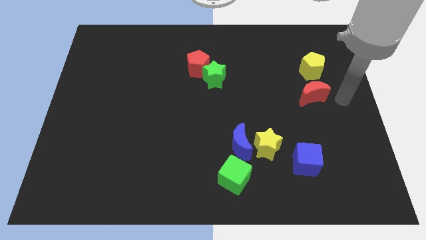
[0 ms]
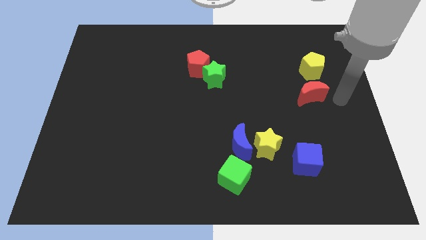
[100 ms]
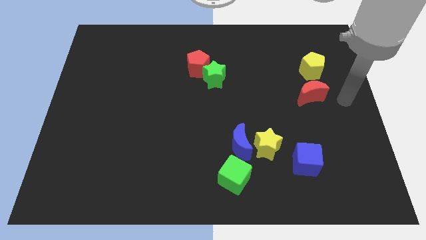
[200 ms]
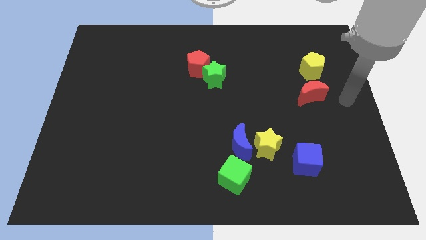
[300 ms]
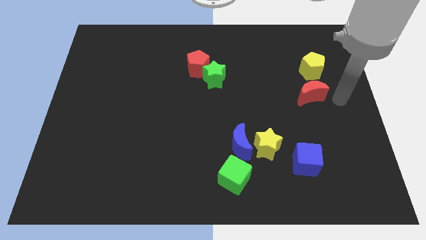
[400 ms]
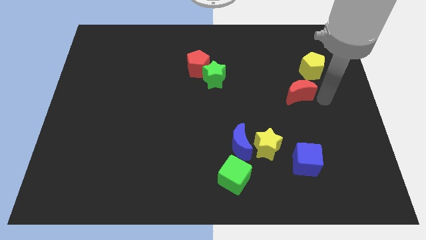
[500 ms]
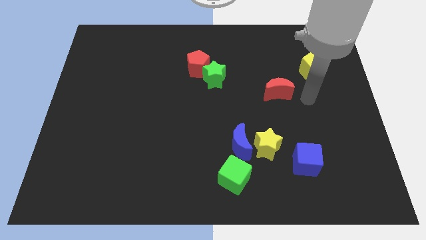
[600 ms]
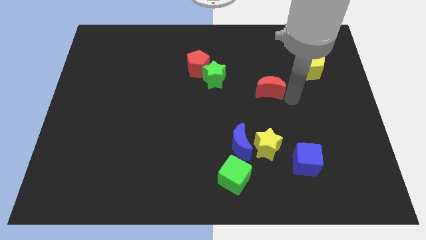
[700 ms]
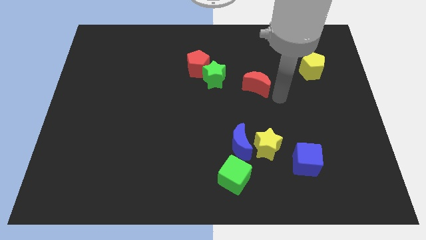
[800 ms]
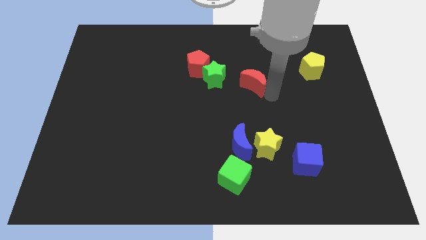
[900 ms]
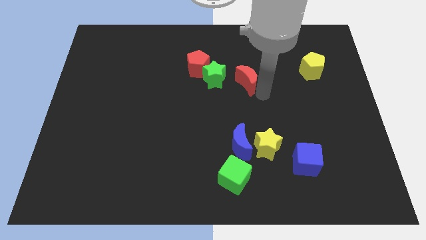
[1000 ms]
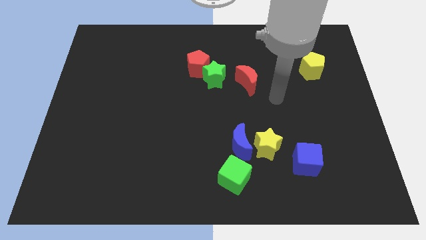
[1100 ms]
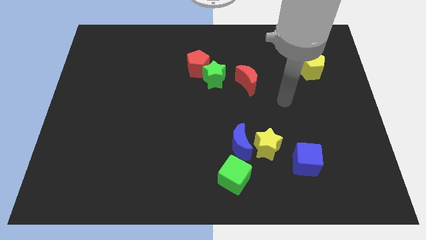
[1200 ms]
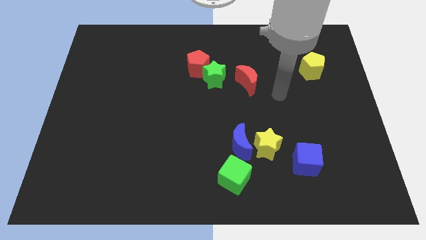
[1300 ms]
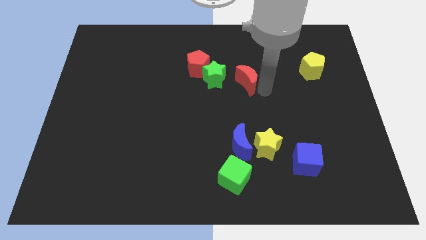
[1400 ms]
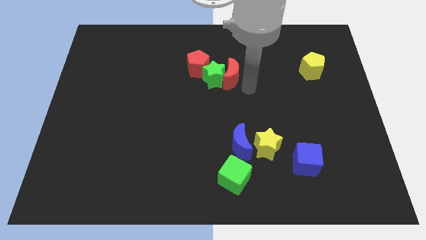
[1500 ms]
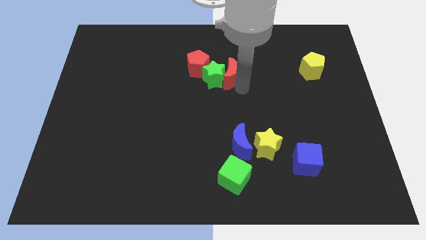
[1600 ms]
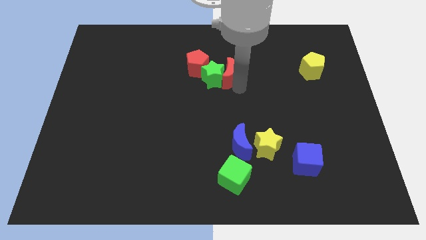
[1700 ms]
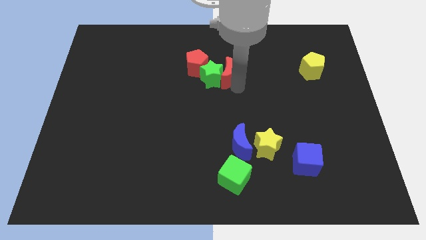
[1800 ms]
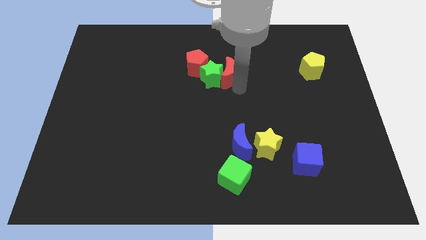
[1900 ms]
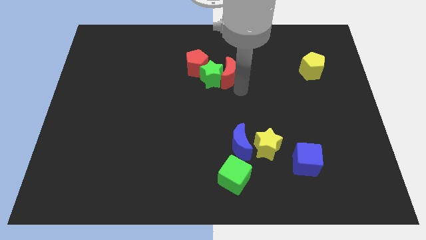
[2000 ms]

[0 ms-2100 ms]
push the red crescent into the green star

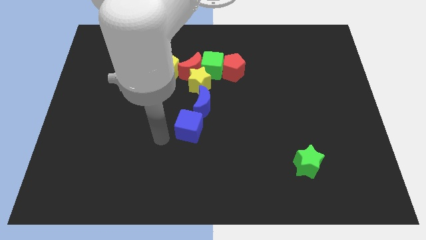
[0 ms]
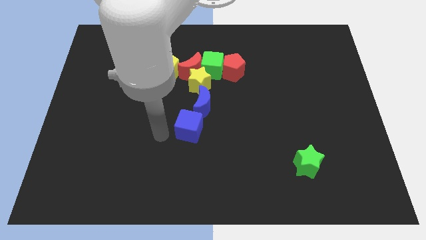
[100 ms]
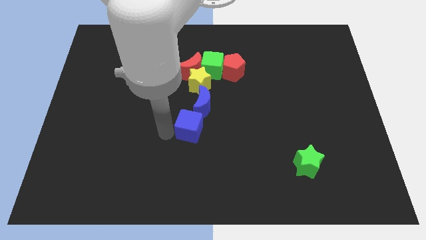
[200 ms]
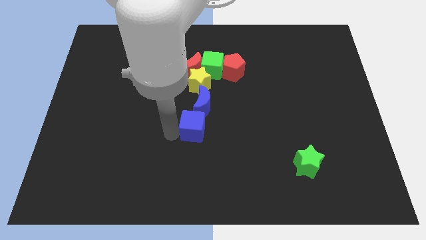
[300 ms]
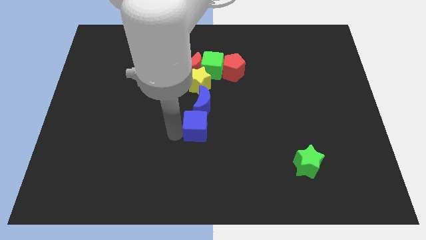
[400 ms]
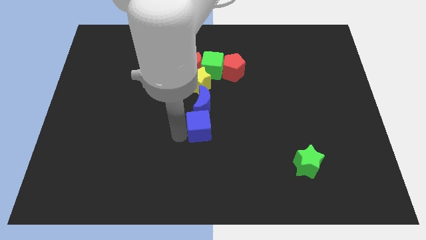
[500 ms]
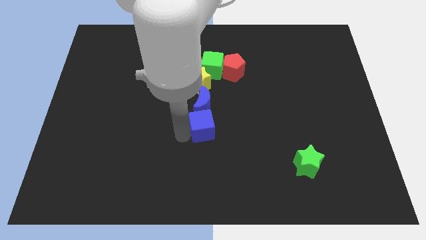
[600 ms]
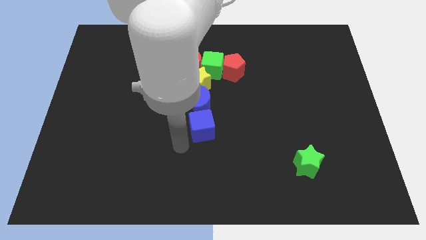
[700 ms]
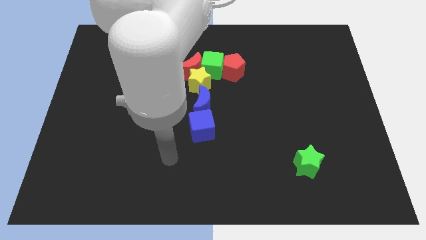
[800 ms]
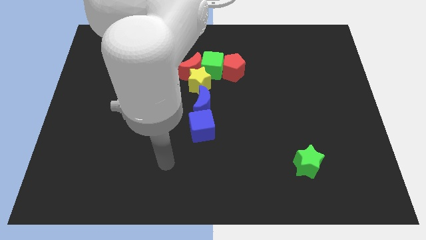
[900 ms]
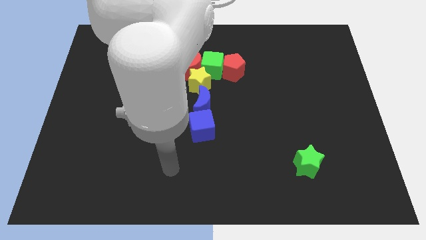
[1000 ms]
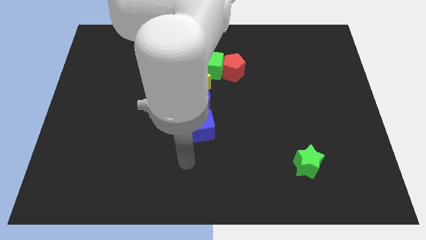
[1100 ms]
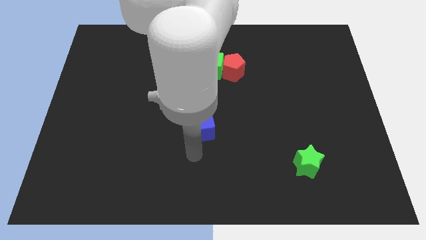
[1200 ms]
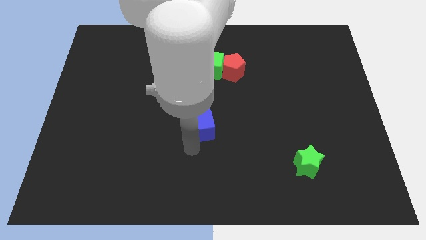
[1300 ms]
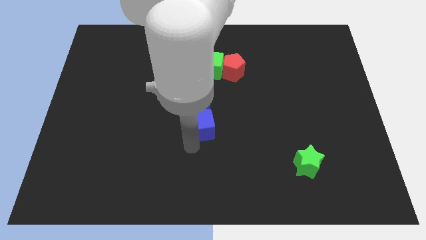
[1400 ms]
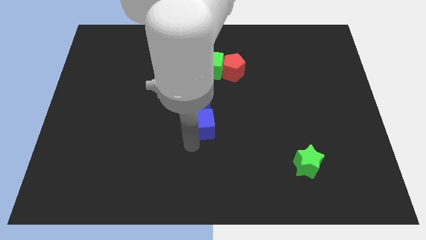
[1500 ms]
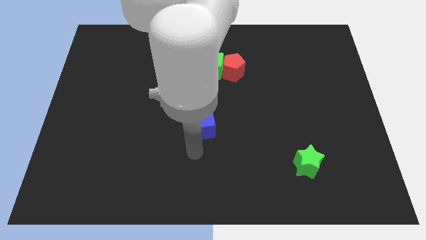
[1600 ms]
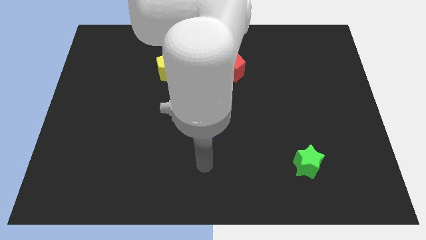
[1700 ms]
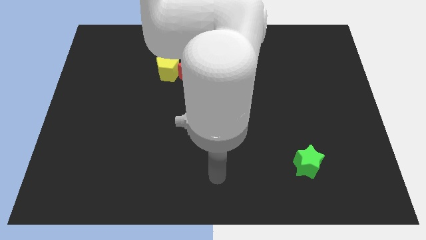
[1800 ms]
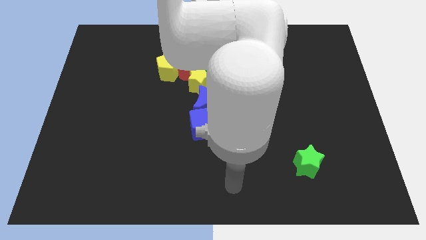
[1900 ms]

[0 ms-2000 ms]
place blue cube below blue moon

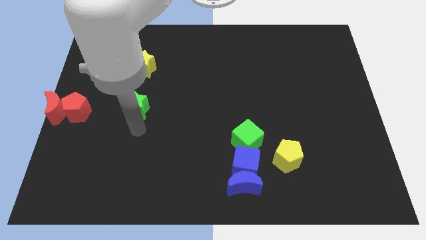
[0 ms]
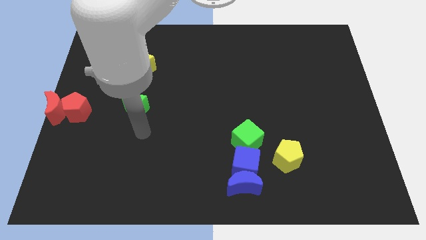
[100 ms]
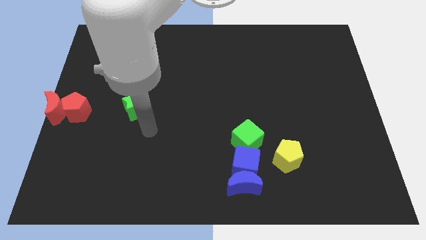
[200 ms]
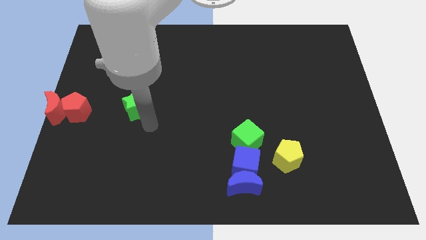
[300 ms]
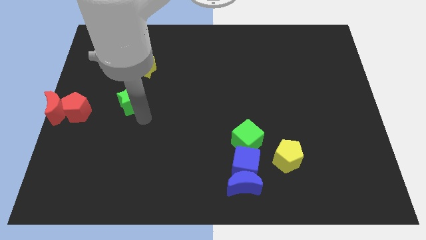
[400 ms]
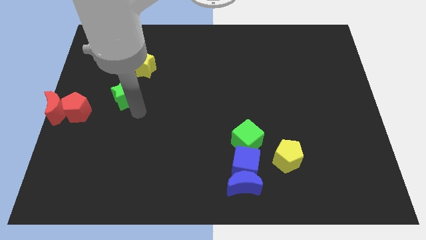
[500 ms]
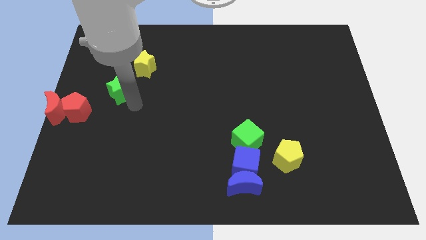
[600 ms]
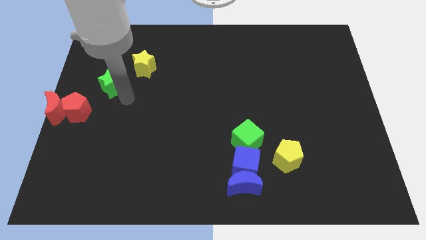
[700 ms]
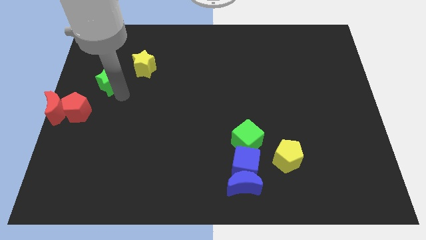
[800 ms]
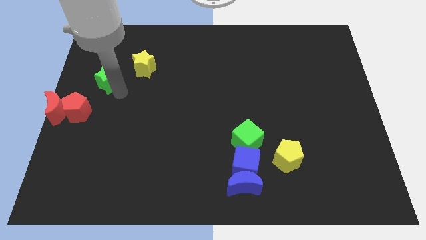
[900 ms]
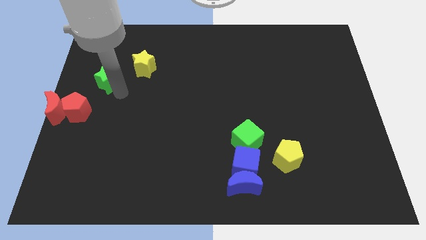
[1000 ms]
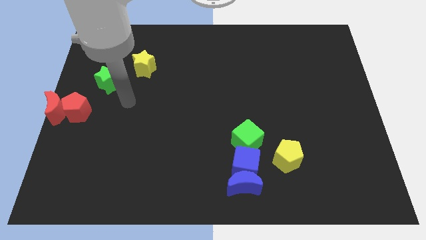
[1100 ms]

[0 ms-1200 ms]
move the green star to the top right of the red pentagon

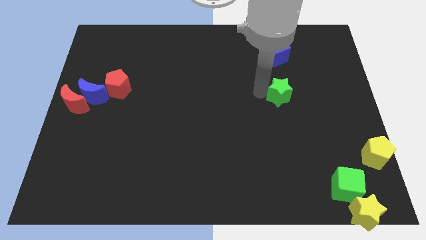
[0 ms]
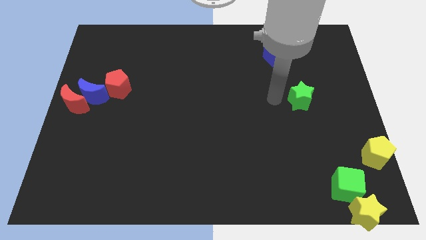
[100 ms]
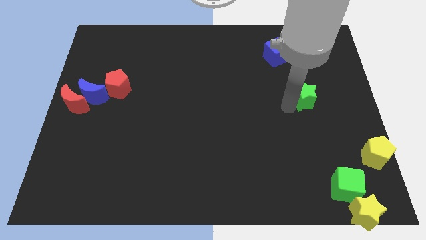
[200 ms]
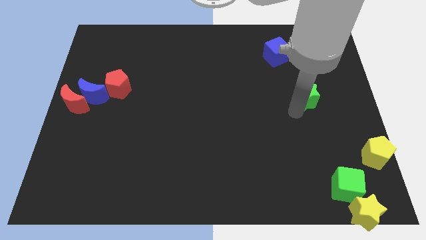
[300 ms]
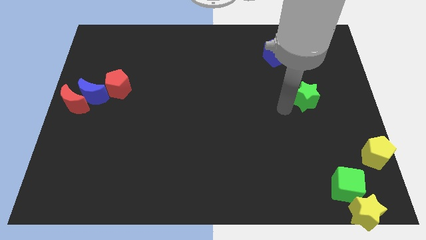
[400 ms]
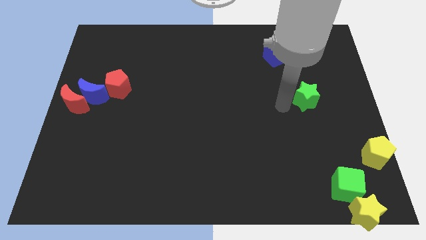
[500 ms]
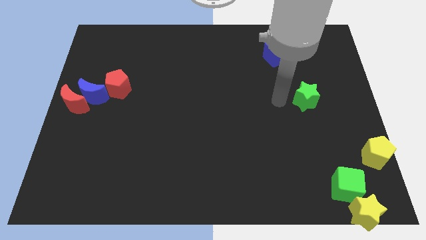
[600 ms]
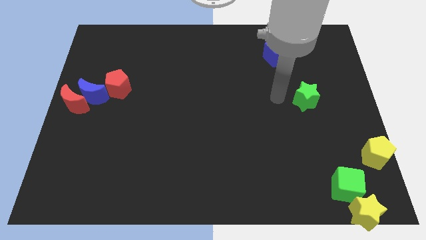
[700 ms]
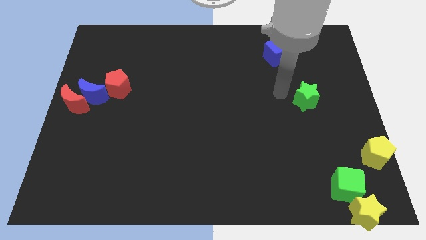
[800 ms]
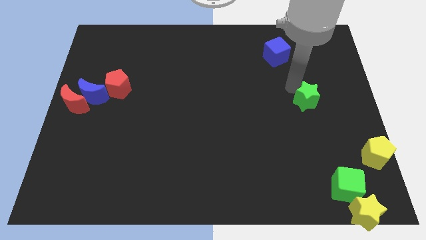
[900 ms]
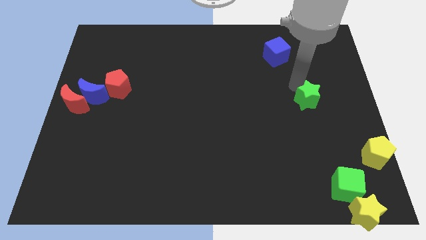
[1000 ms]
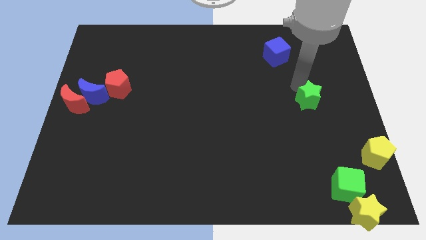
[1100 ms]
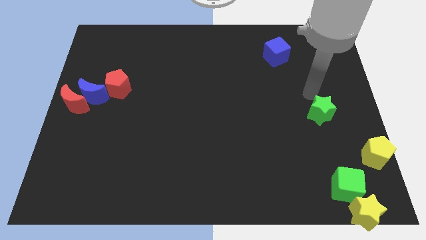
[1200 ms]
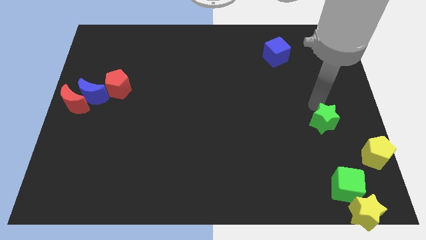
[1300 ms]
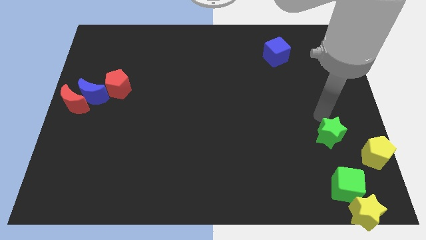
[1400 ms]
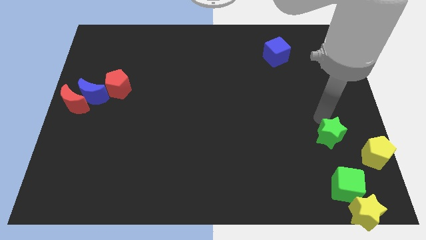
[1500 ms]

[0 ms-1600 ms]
place the green star diagonally left to yellow pentagon

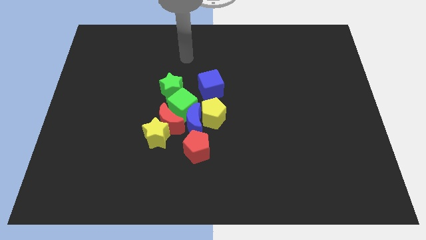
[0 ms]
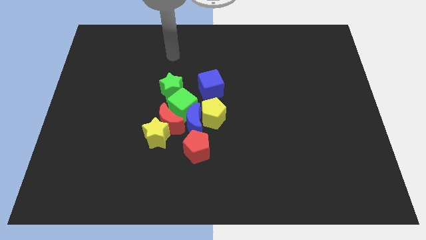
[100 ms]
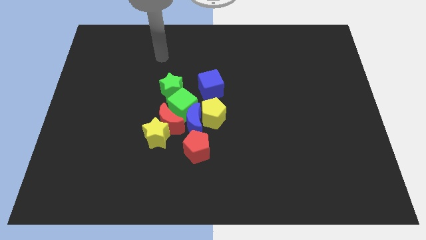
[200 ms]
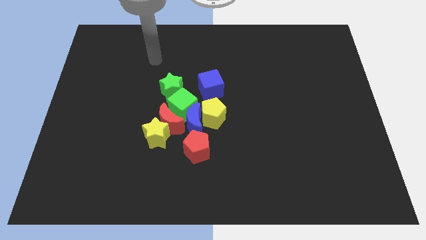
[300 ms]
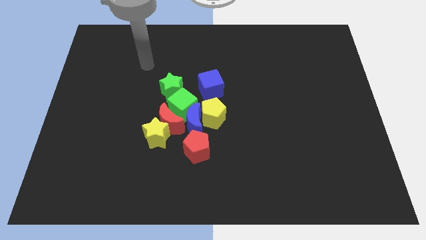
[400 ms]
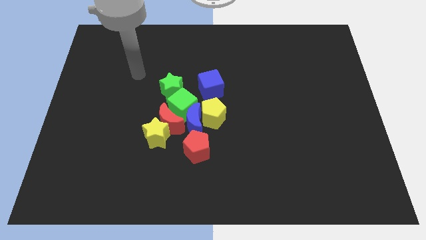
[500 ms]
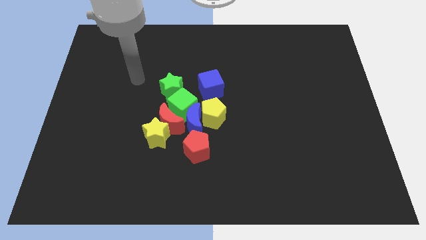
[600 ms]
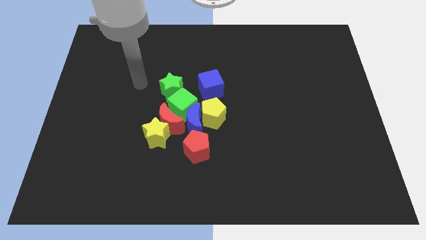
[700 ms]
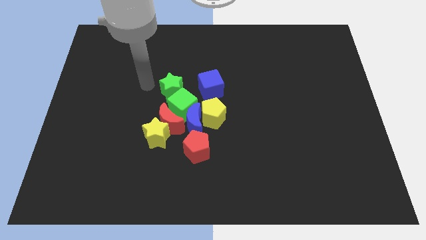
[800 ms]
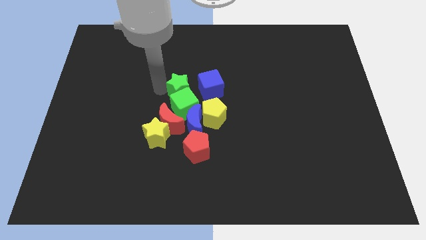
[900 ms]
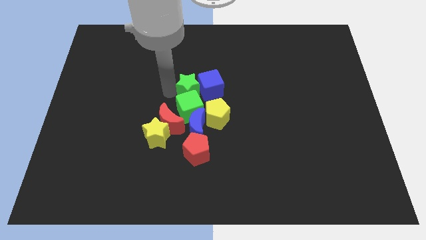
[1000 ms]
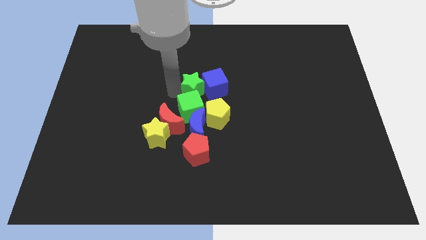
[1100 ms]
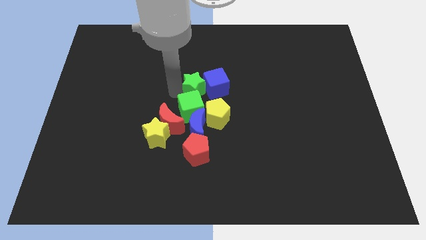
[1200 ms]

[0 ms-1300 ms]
push the green star into the blue cube
